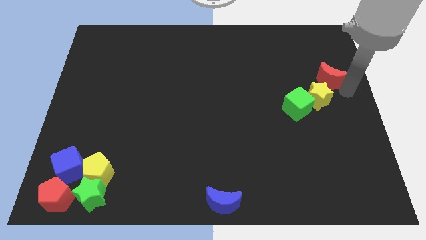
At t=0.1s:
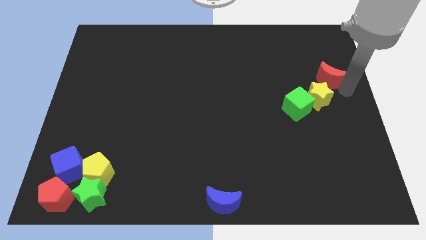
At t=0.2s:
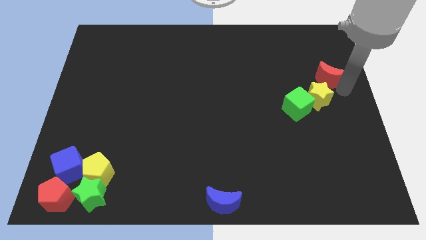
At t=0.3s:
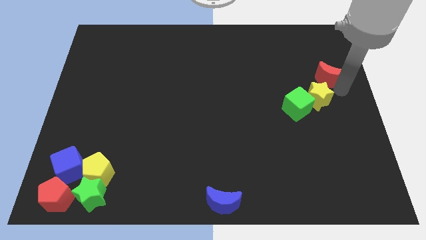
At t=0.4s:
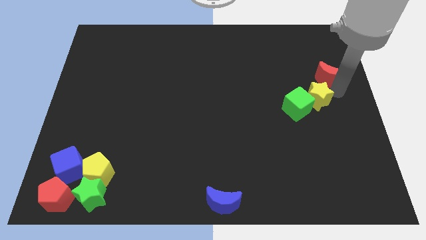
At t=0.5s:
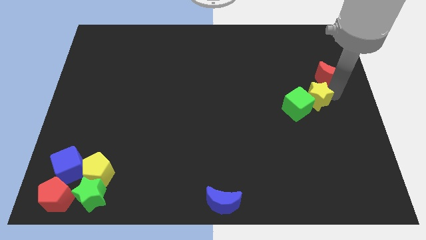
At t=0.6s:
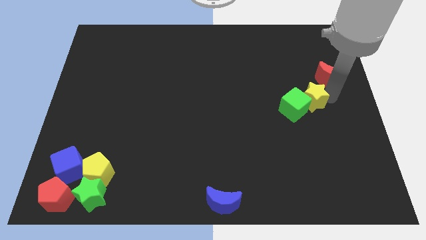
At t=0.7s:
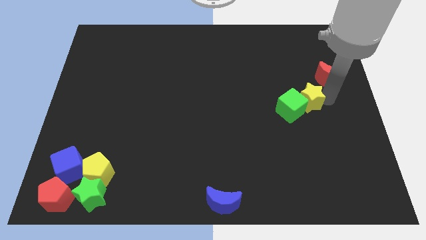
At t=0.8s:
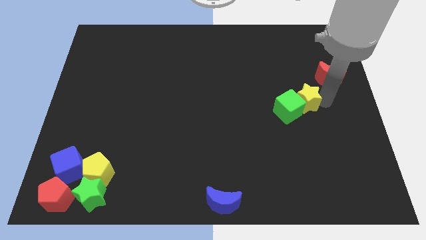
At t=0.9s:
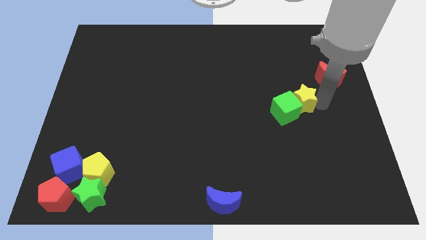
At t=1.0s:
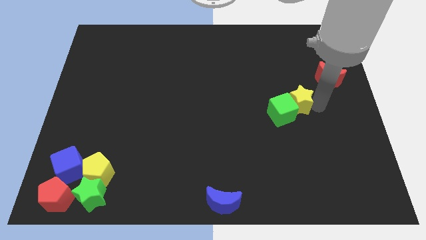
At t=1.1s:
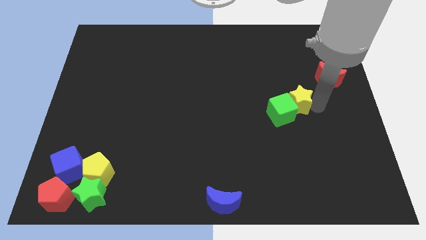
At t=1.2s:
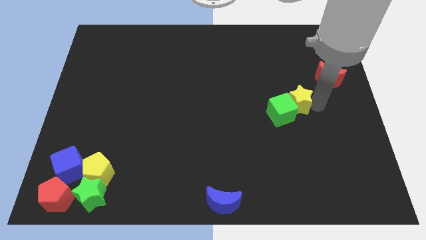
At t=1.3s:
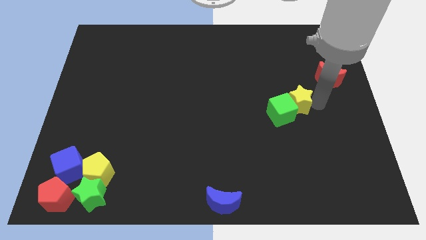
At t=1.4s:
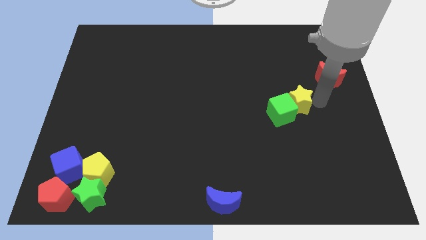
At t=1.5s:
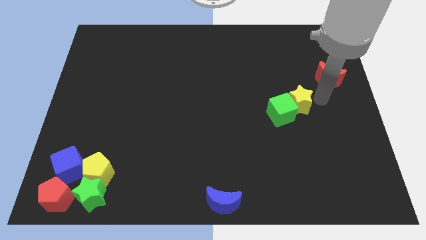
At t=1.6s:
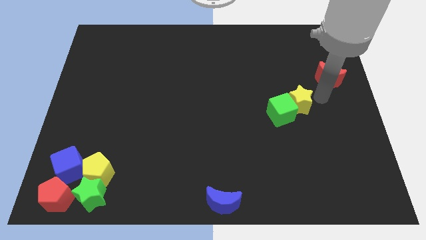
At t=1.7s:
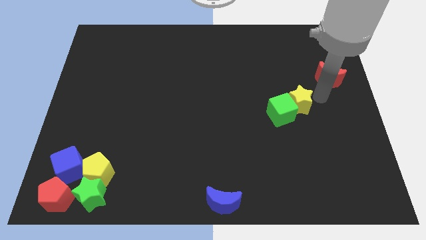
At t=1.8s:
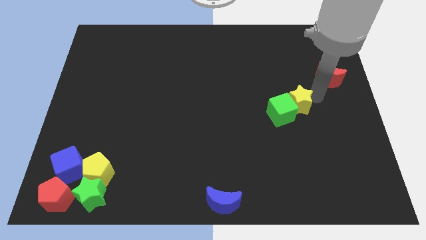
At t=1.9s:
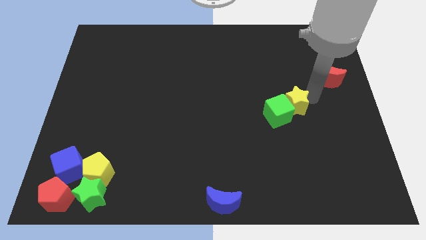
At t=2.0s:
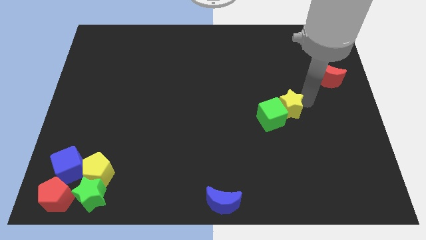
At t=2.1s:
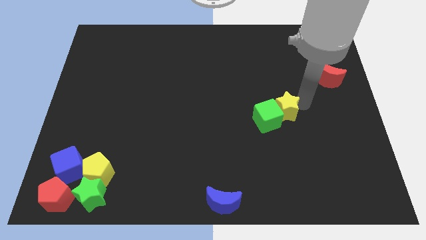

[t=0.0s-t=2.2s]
push the yellow star into the green cube

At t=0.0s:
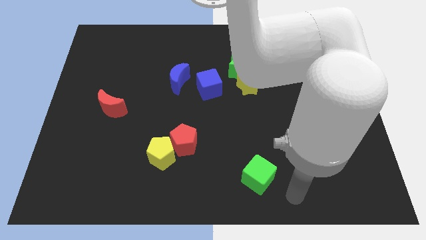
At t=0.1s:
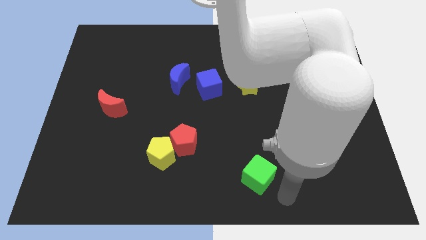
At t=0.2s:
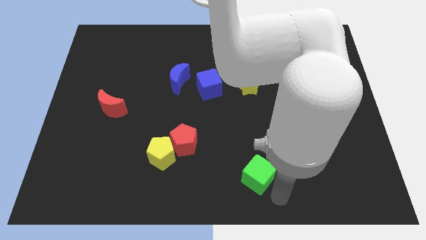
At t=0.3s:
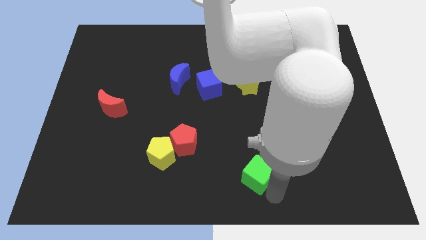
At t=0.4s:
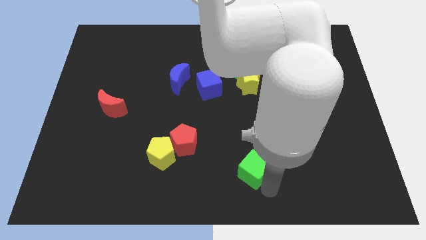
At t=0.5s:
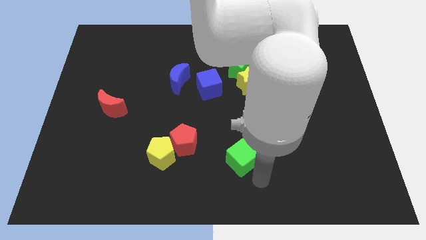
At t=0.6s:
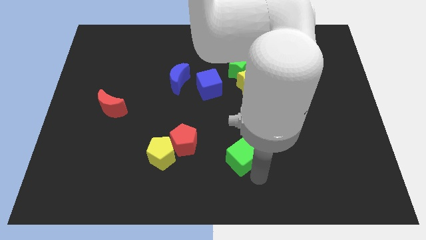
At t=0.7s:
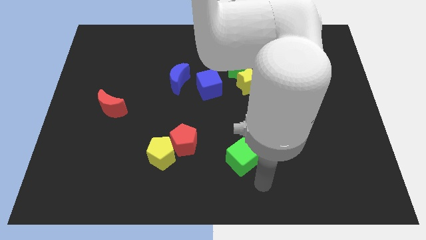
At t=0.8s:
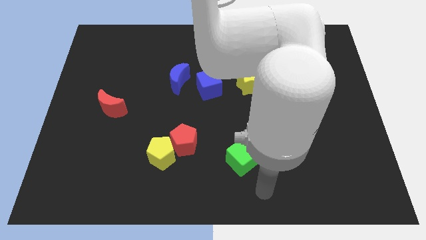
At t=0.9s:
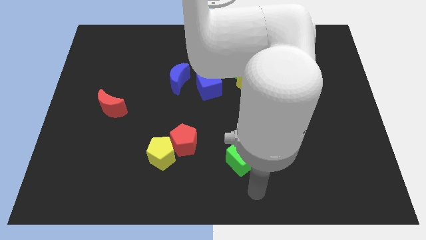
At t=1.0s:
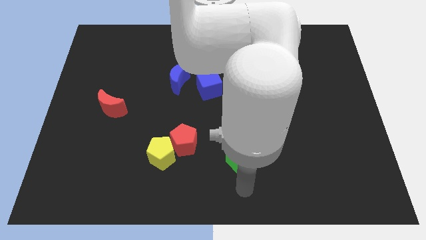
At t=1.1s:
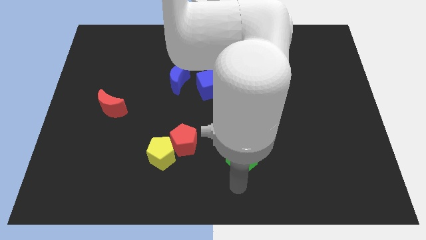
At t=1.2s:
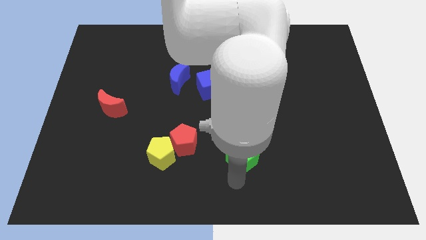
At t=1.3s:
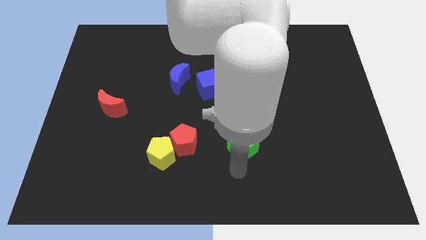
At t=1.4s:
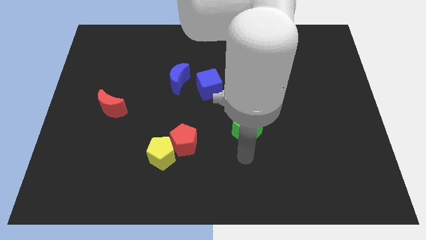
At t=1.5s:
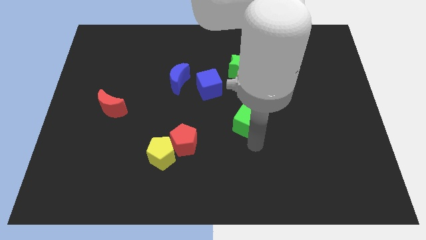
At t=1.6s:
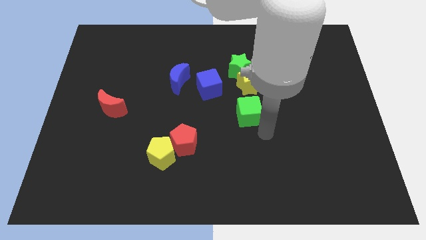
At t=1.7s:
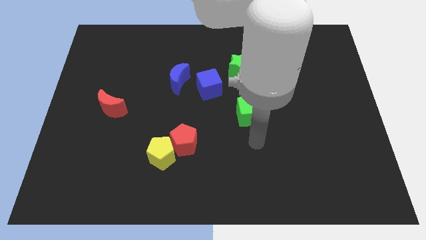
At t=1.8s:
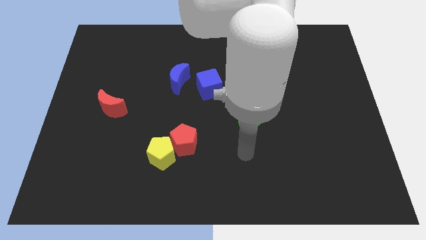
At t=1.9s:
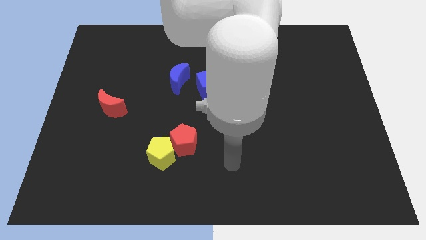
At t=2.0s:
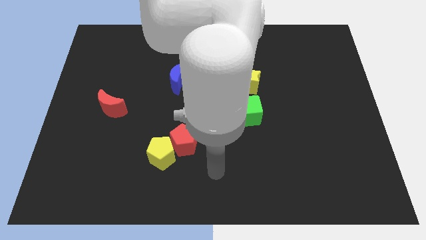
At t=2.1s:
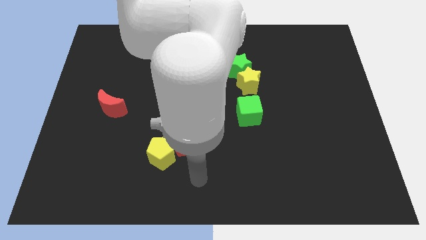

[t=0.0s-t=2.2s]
place green cube to the center

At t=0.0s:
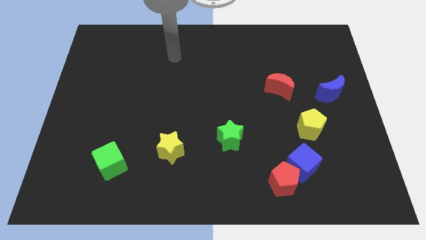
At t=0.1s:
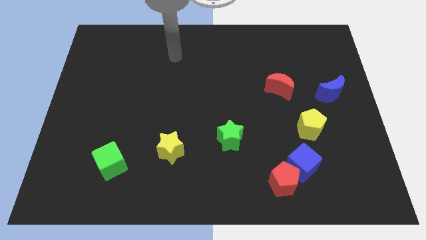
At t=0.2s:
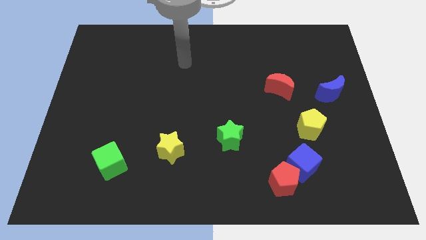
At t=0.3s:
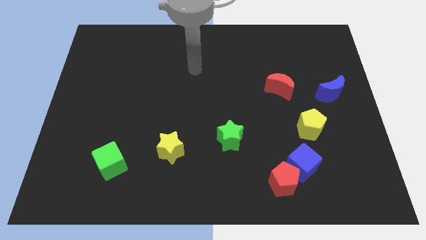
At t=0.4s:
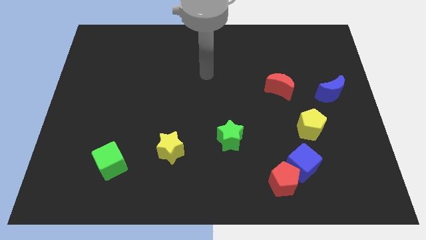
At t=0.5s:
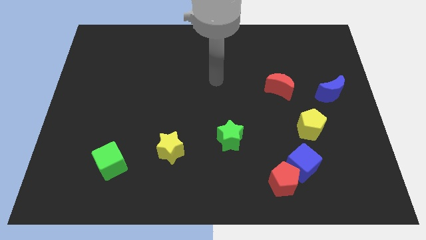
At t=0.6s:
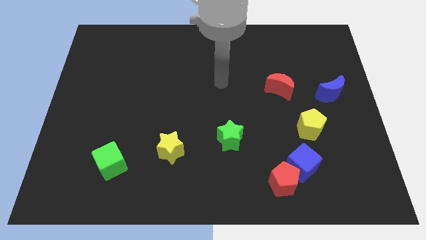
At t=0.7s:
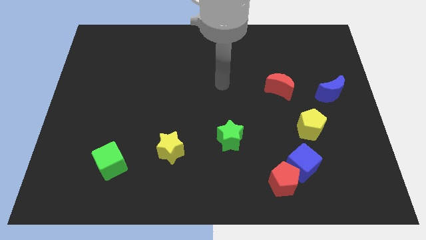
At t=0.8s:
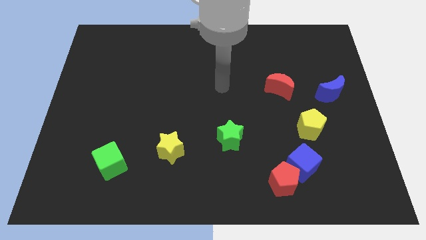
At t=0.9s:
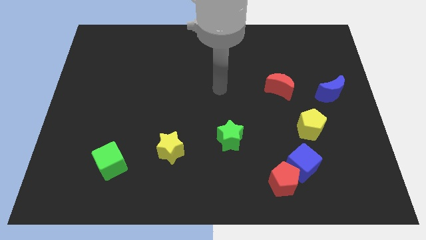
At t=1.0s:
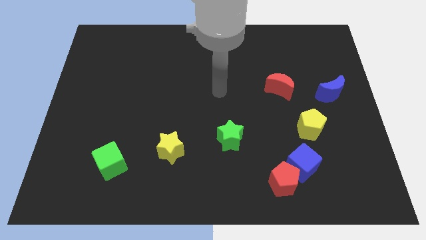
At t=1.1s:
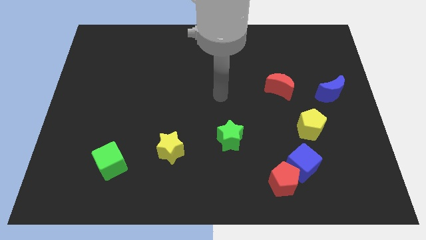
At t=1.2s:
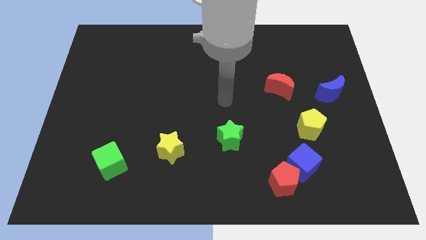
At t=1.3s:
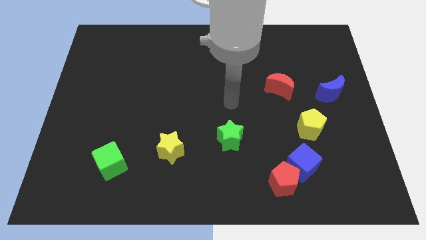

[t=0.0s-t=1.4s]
point your arm at the top of the green star

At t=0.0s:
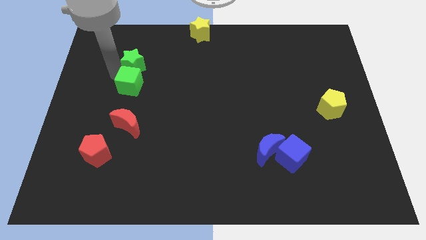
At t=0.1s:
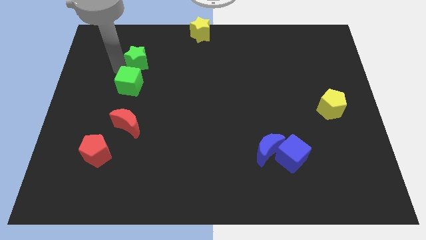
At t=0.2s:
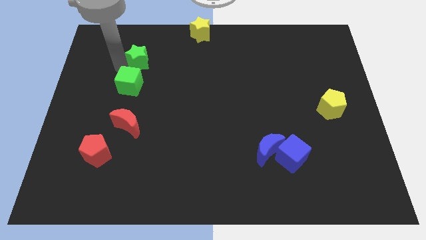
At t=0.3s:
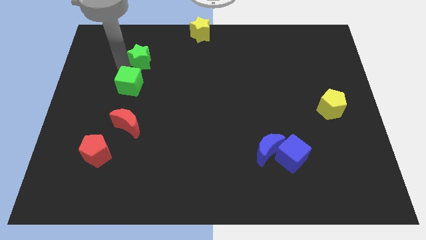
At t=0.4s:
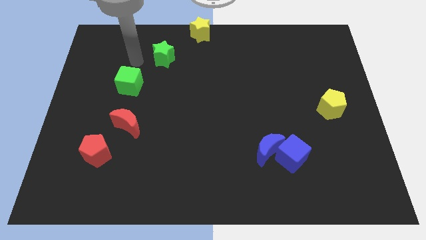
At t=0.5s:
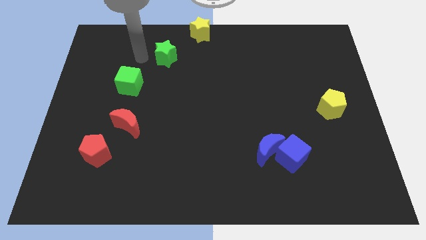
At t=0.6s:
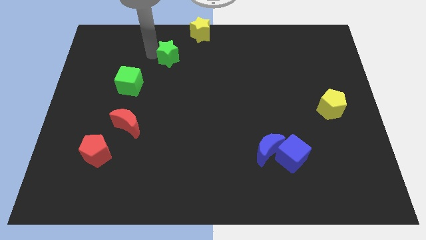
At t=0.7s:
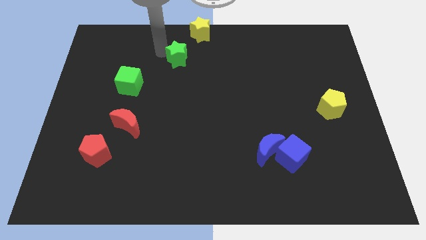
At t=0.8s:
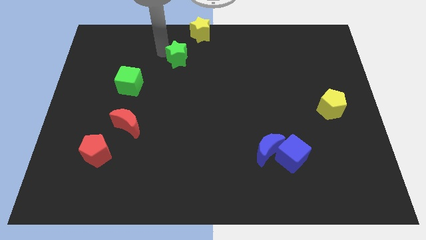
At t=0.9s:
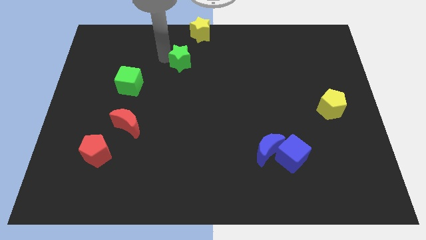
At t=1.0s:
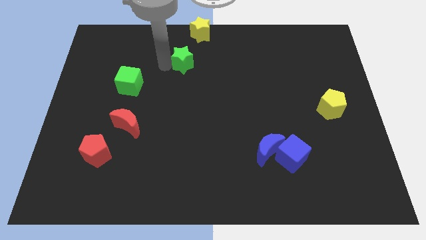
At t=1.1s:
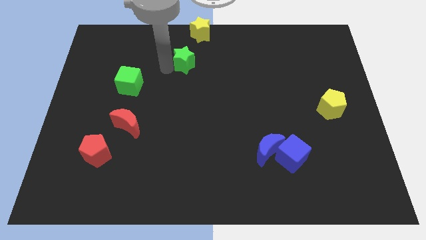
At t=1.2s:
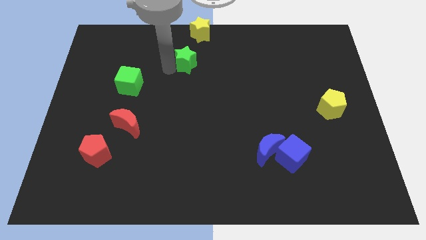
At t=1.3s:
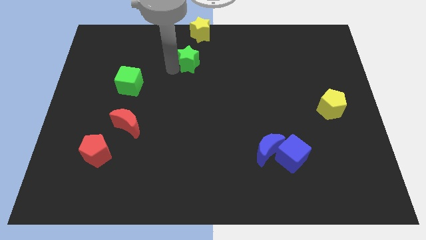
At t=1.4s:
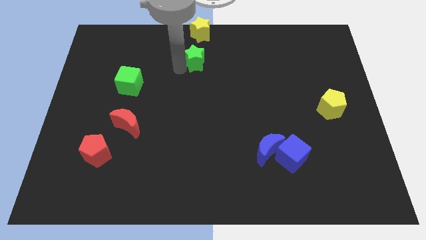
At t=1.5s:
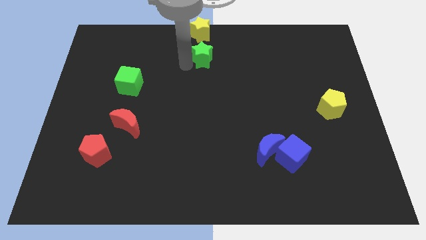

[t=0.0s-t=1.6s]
slide the green star under the yellow star

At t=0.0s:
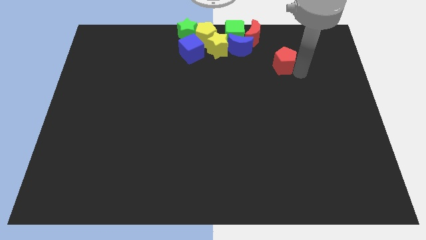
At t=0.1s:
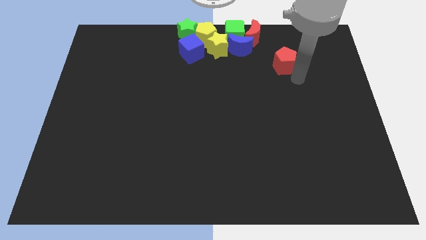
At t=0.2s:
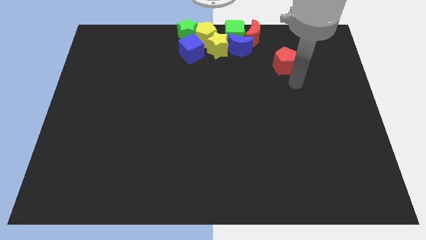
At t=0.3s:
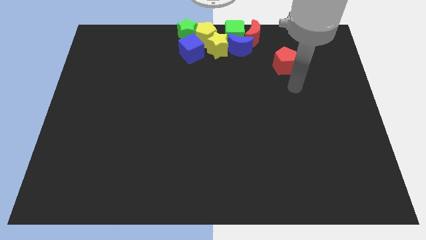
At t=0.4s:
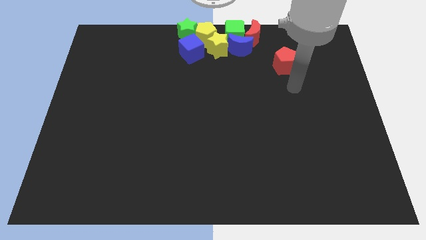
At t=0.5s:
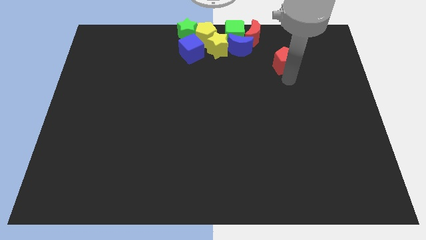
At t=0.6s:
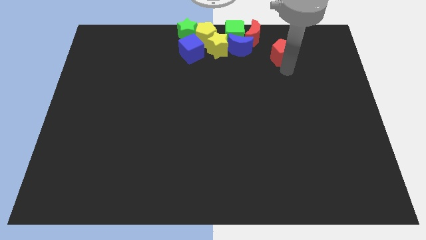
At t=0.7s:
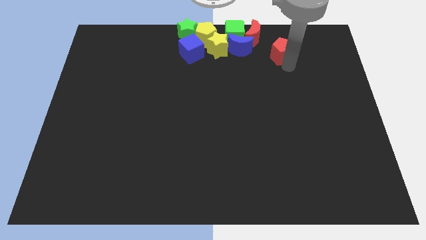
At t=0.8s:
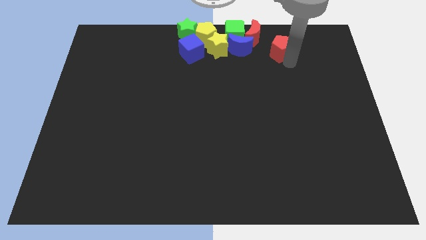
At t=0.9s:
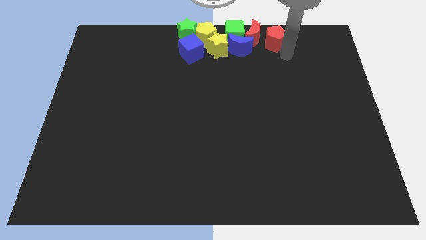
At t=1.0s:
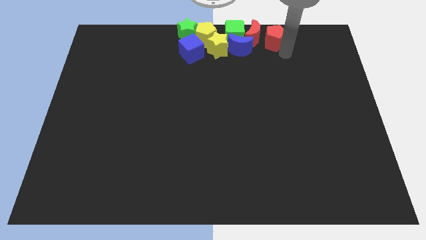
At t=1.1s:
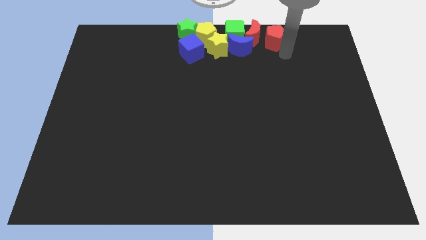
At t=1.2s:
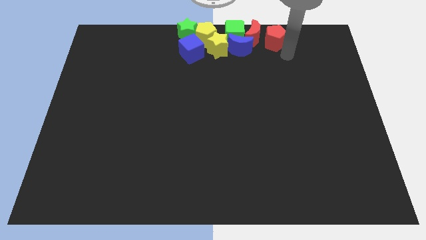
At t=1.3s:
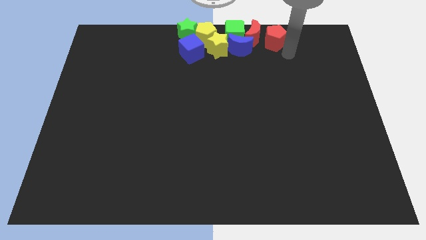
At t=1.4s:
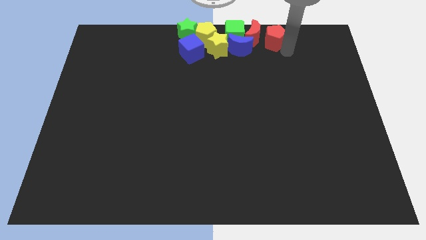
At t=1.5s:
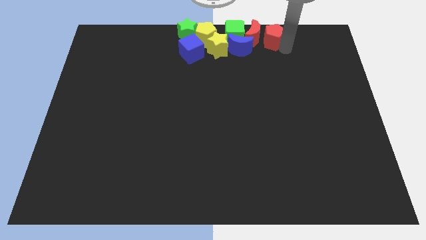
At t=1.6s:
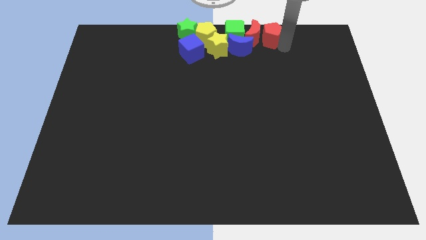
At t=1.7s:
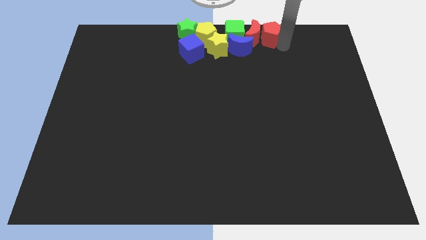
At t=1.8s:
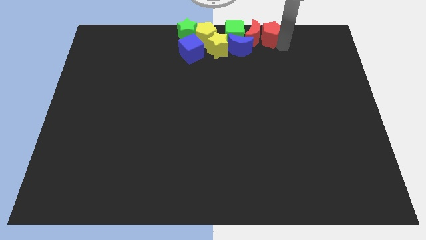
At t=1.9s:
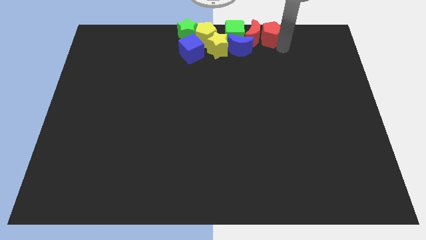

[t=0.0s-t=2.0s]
move the red pentagon to the right side of the red moon
